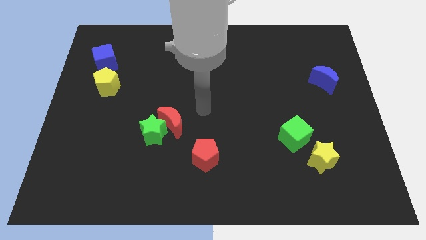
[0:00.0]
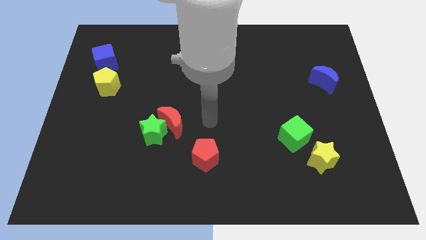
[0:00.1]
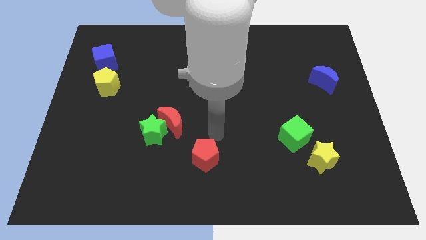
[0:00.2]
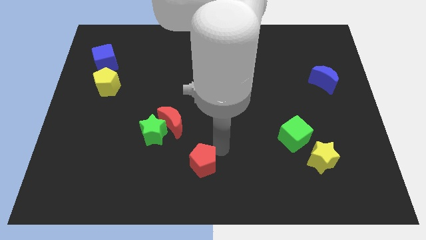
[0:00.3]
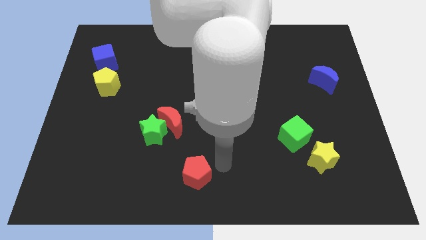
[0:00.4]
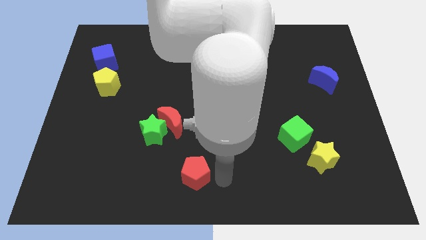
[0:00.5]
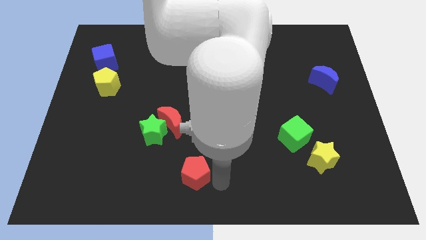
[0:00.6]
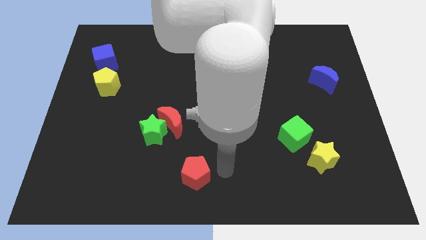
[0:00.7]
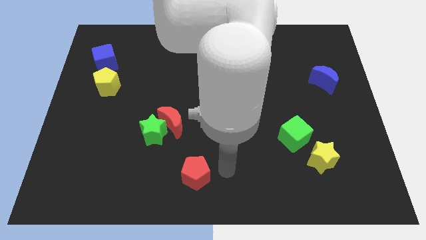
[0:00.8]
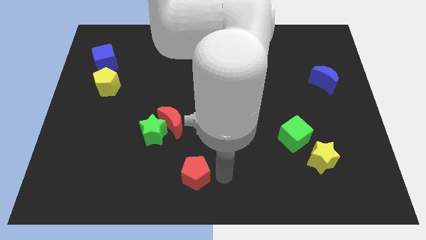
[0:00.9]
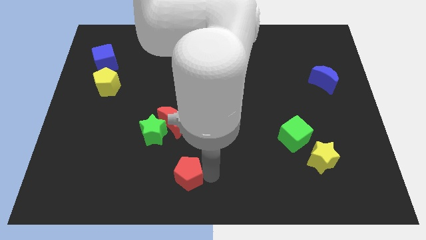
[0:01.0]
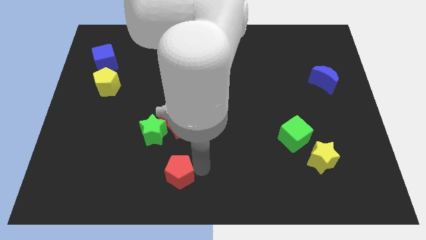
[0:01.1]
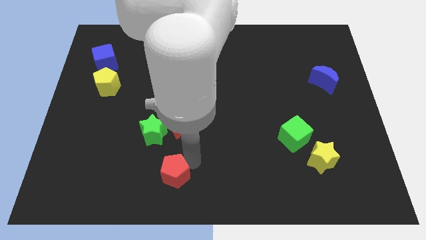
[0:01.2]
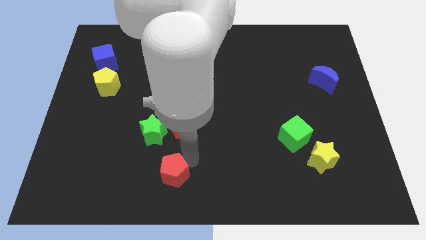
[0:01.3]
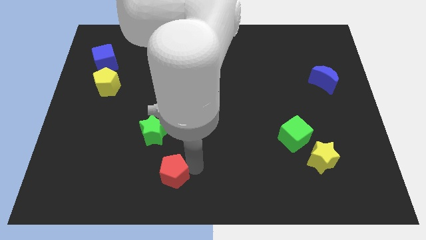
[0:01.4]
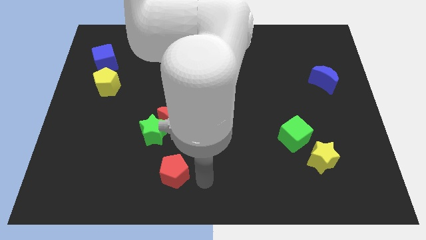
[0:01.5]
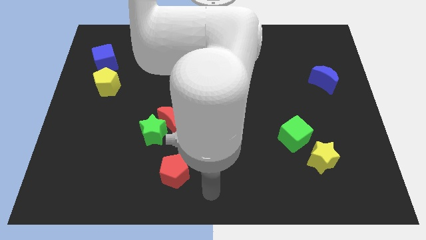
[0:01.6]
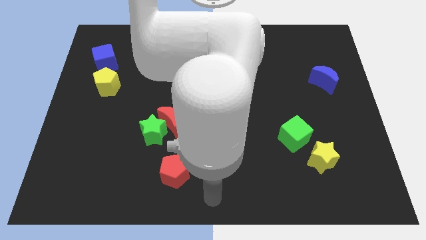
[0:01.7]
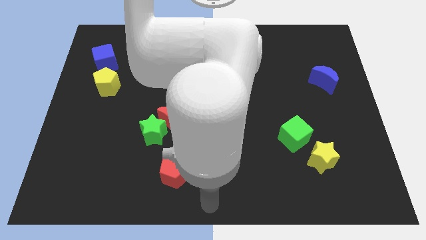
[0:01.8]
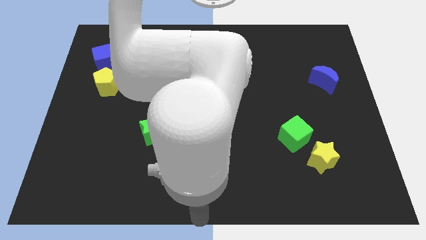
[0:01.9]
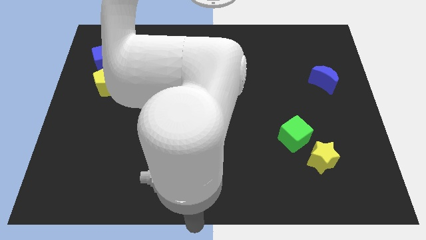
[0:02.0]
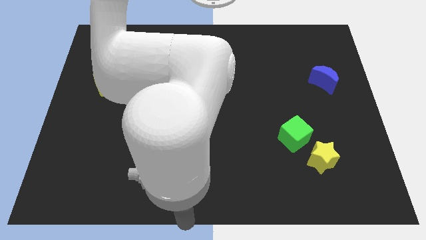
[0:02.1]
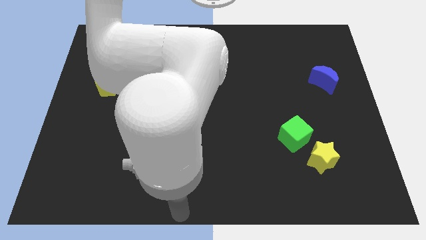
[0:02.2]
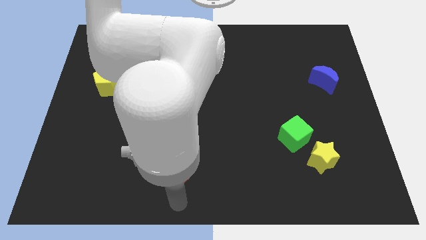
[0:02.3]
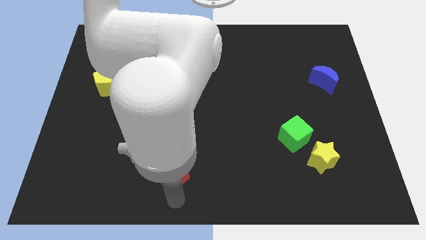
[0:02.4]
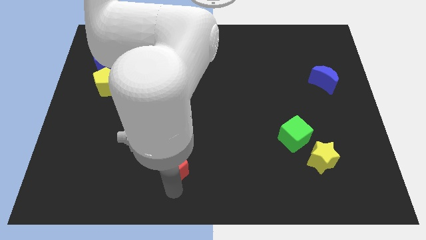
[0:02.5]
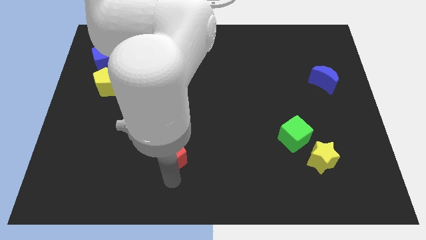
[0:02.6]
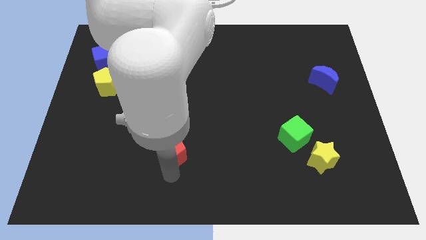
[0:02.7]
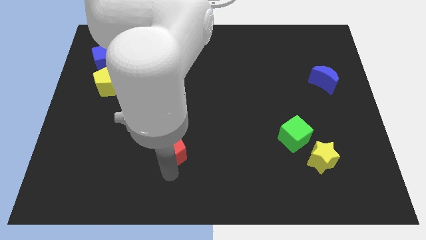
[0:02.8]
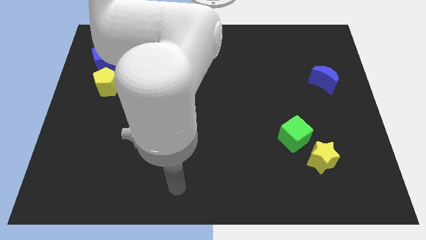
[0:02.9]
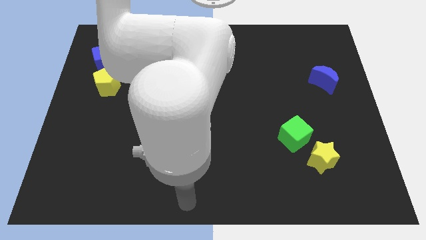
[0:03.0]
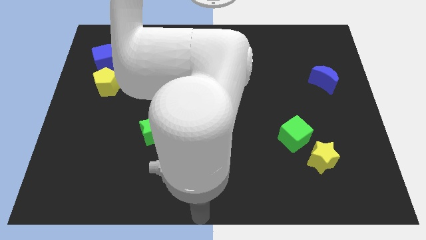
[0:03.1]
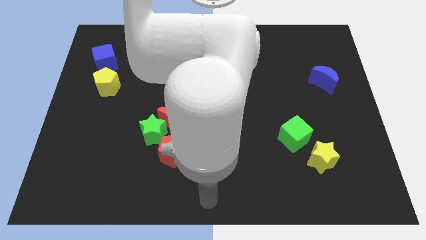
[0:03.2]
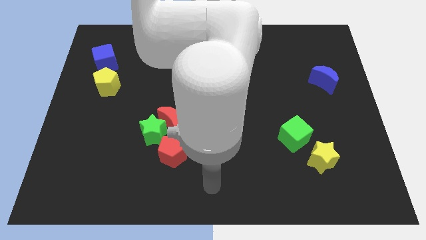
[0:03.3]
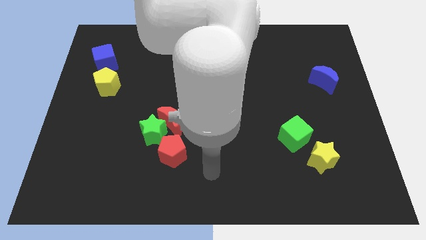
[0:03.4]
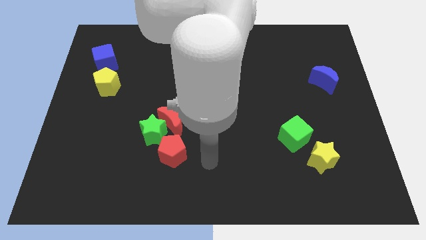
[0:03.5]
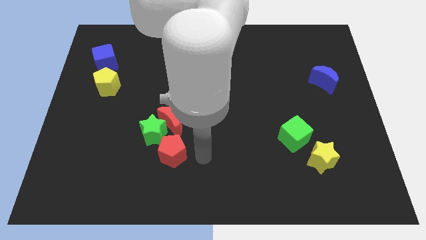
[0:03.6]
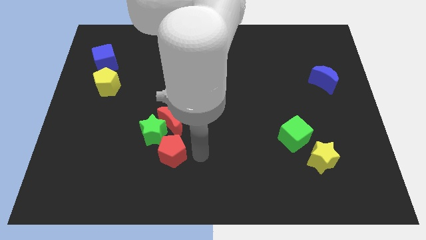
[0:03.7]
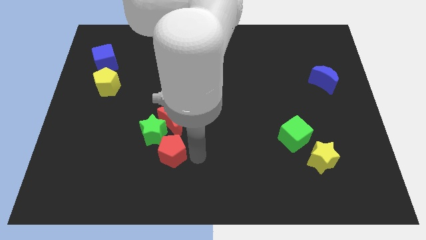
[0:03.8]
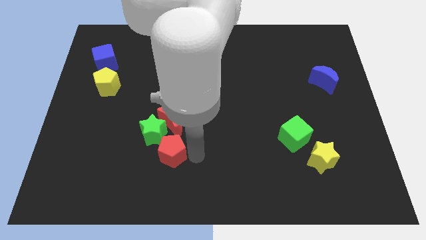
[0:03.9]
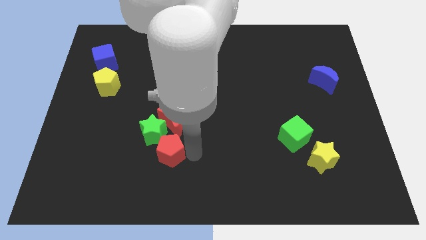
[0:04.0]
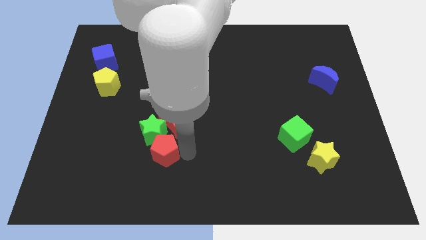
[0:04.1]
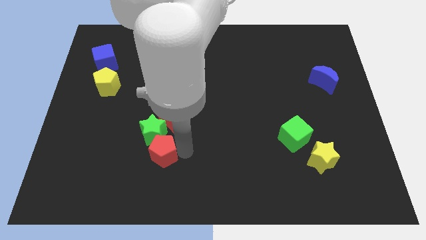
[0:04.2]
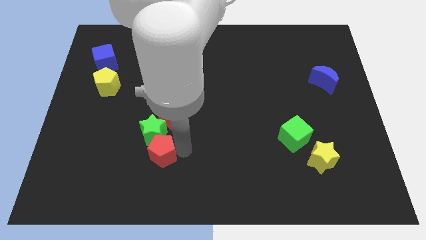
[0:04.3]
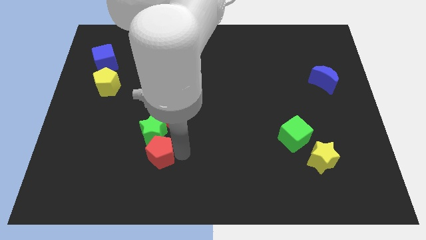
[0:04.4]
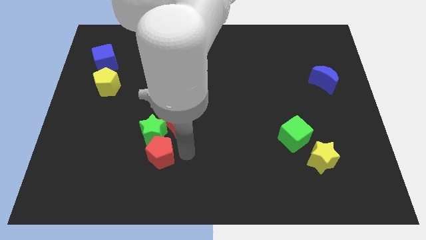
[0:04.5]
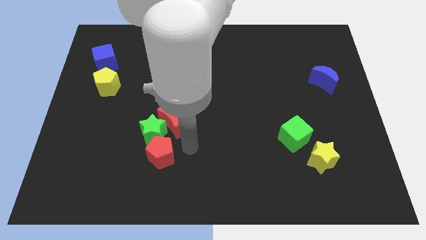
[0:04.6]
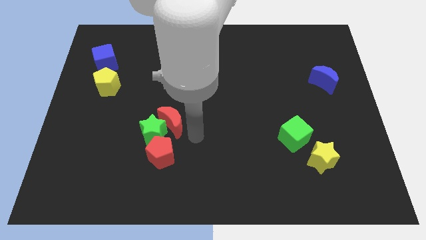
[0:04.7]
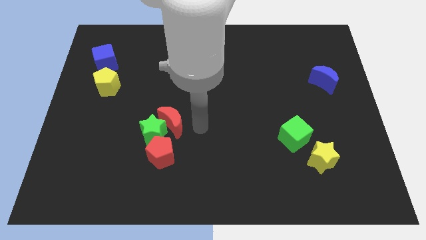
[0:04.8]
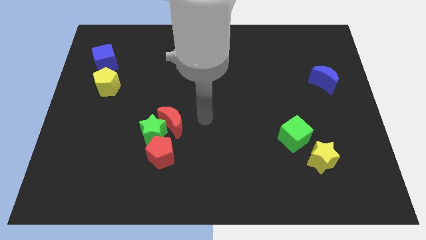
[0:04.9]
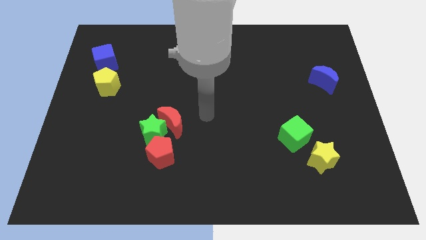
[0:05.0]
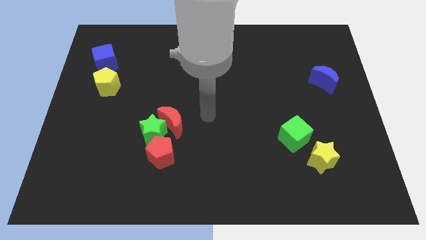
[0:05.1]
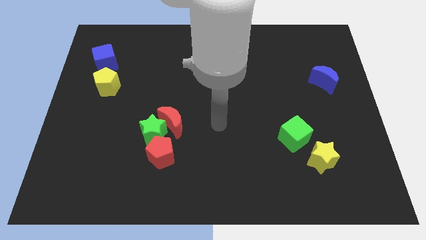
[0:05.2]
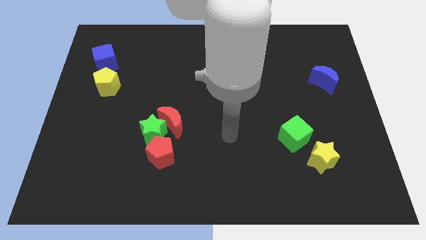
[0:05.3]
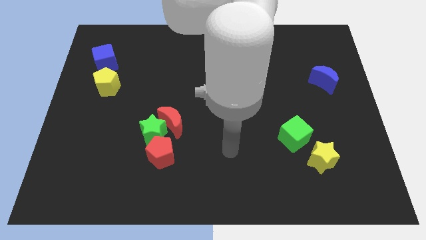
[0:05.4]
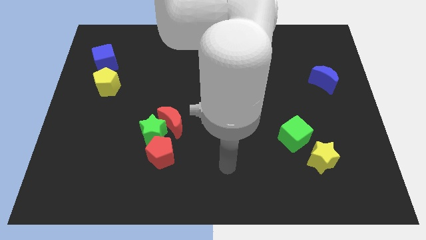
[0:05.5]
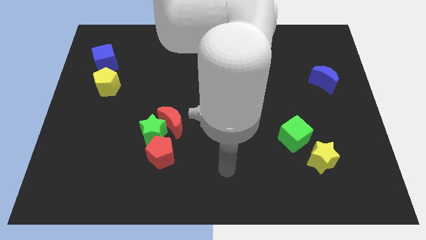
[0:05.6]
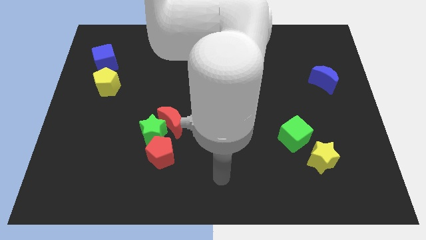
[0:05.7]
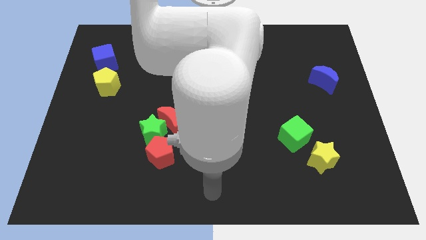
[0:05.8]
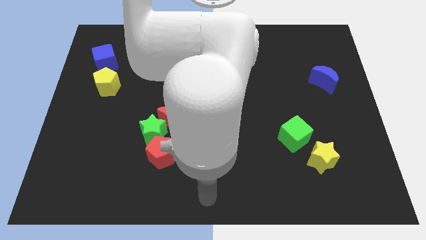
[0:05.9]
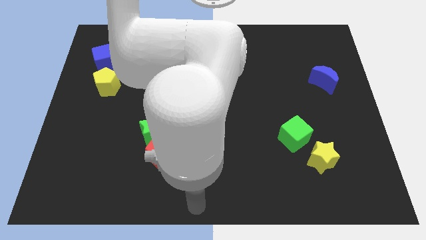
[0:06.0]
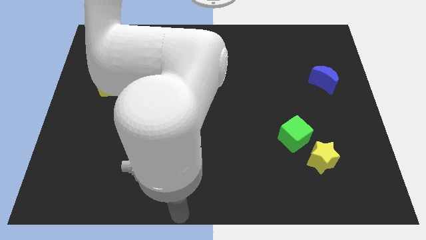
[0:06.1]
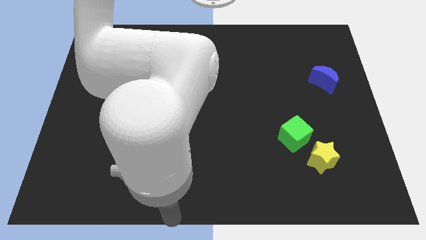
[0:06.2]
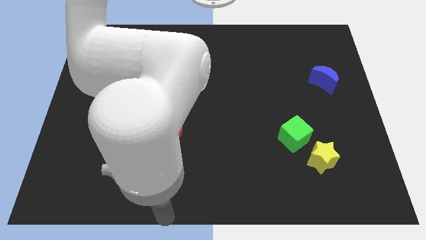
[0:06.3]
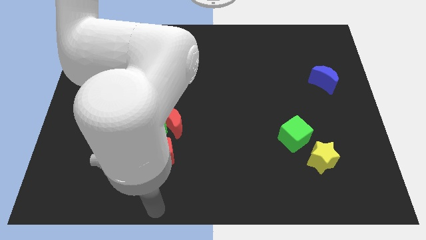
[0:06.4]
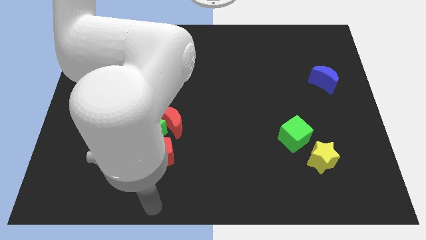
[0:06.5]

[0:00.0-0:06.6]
move red blocks and green star slightly up

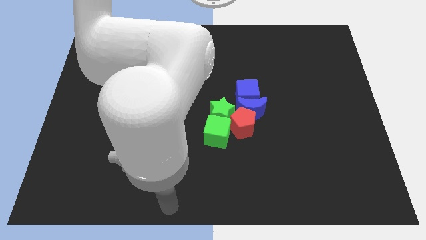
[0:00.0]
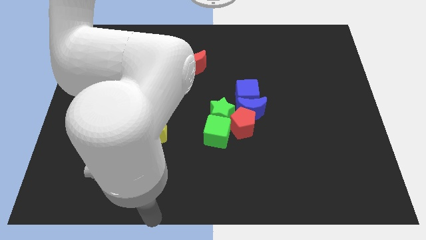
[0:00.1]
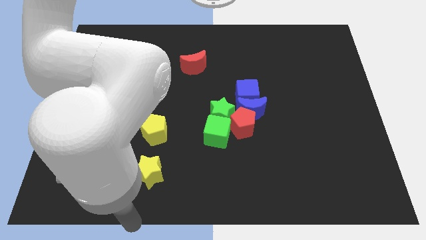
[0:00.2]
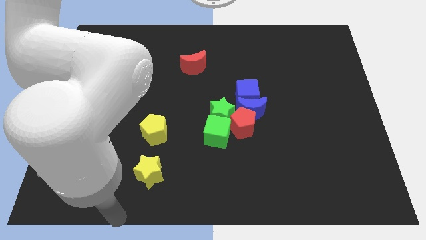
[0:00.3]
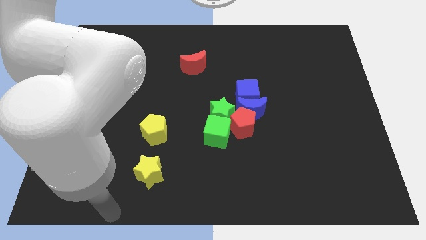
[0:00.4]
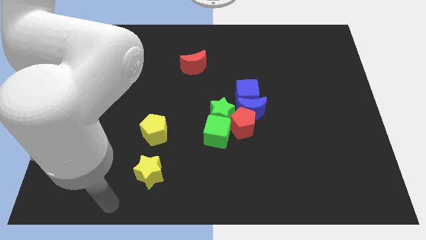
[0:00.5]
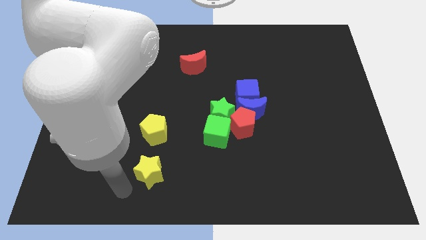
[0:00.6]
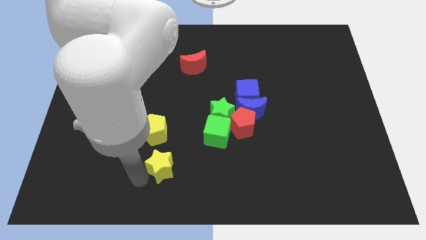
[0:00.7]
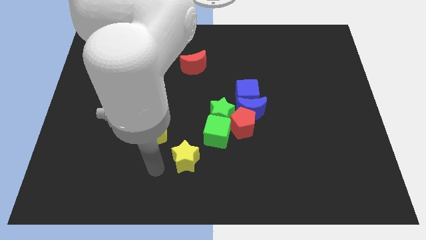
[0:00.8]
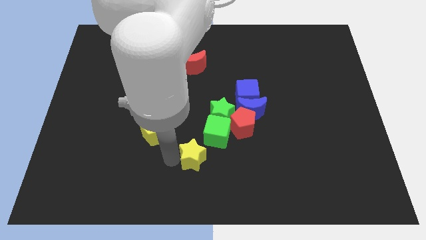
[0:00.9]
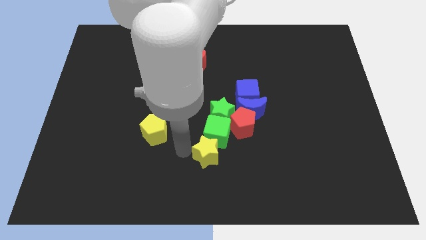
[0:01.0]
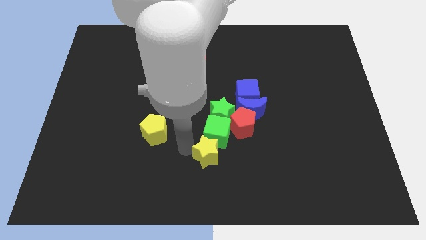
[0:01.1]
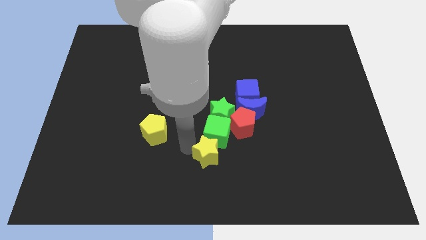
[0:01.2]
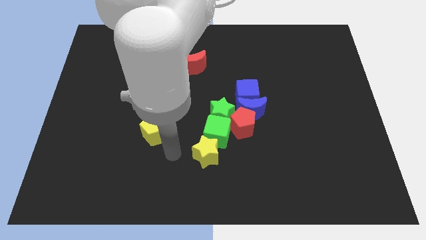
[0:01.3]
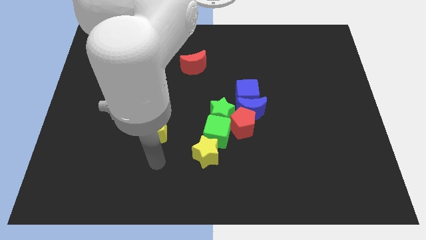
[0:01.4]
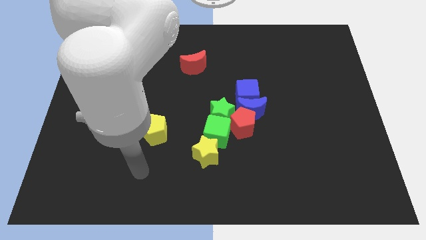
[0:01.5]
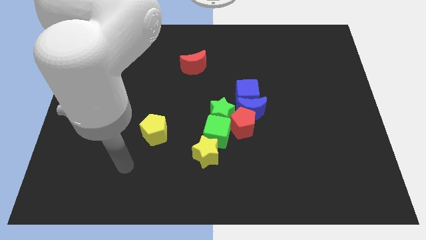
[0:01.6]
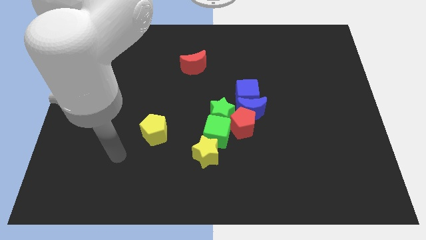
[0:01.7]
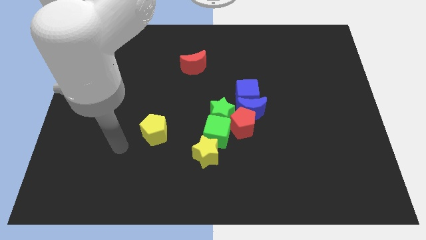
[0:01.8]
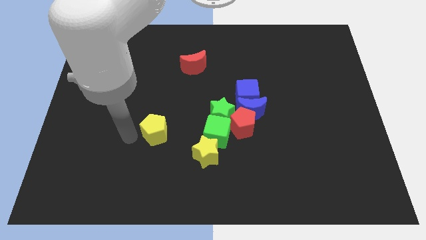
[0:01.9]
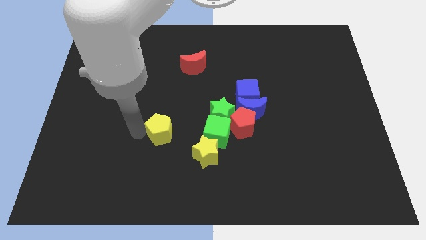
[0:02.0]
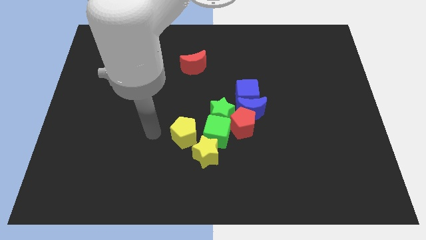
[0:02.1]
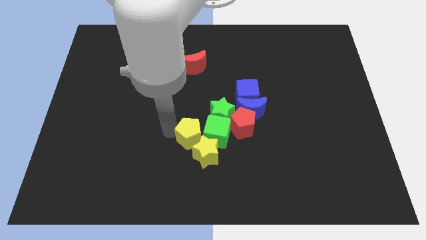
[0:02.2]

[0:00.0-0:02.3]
move the yellow star below to the green cube

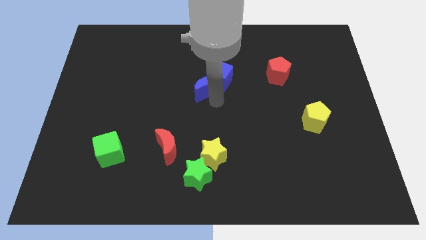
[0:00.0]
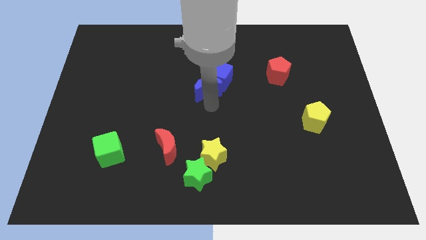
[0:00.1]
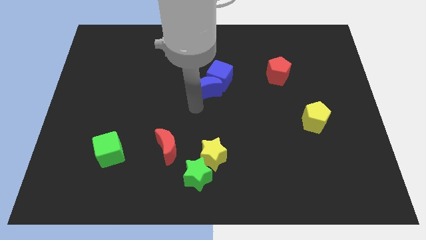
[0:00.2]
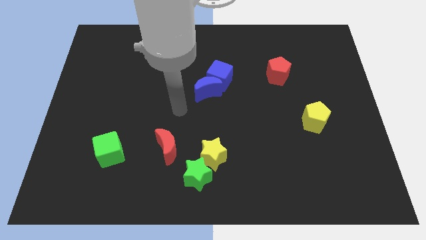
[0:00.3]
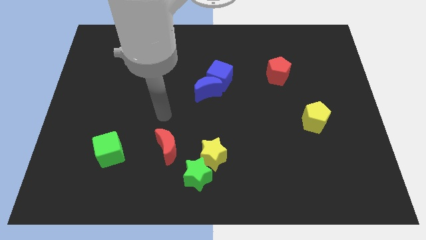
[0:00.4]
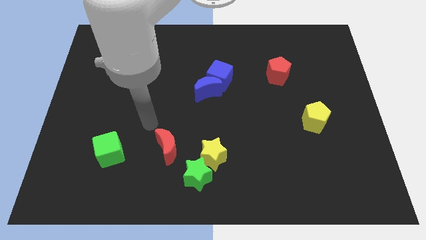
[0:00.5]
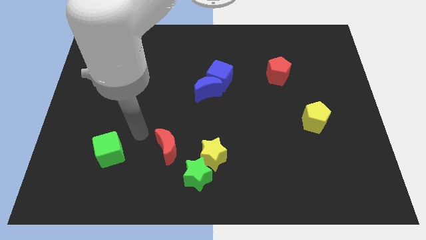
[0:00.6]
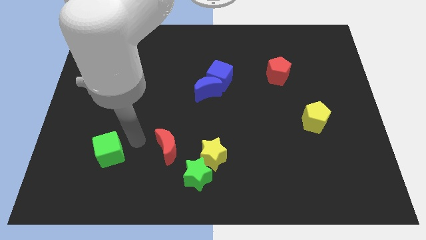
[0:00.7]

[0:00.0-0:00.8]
move the arm away from the blue moon
